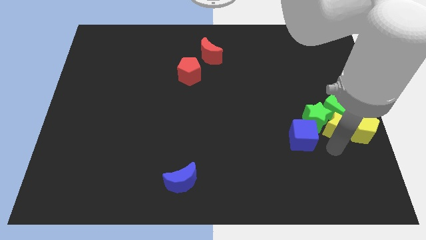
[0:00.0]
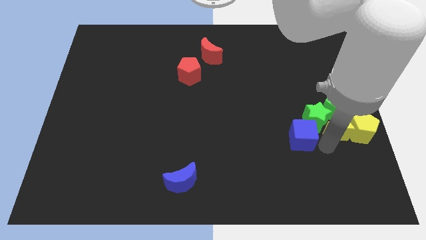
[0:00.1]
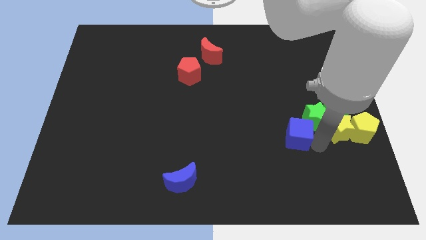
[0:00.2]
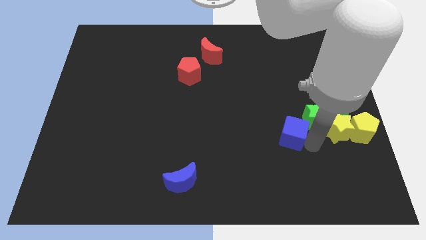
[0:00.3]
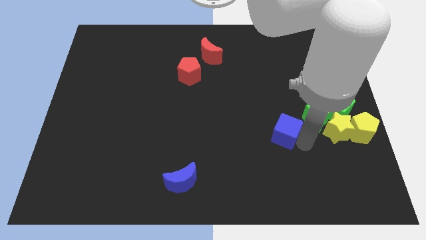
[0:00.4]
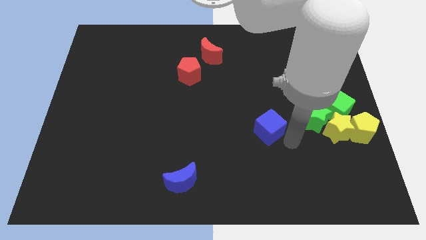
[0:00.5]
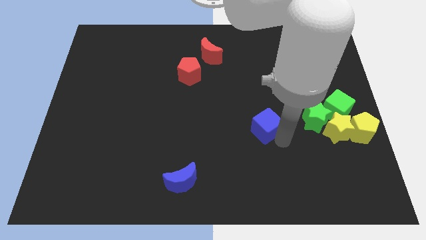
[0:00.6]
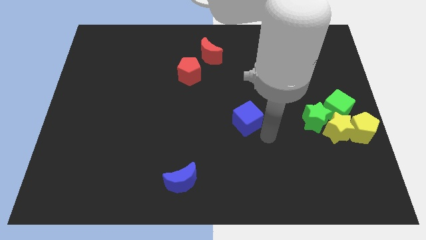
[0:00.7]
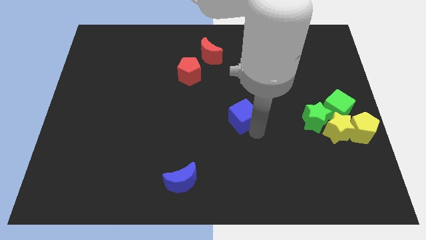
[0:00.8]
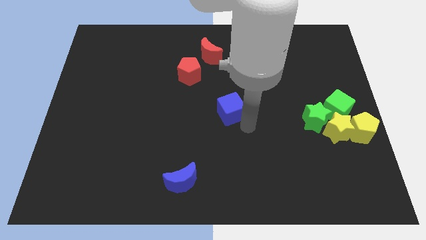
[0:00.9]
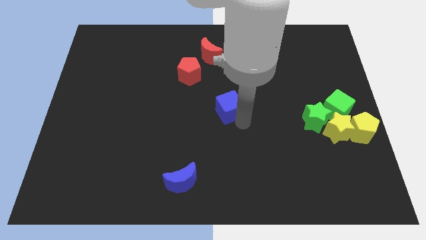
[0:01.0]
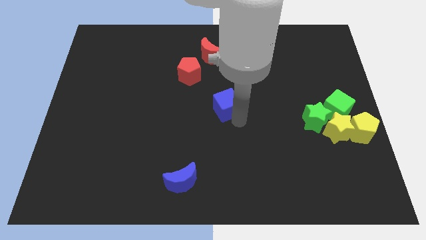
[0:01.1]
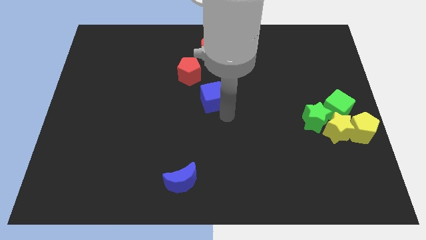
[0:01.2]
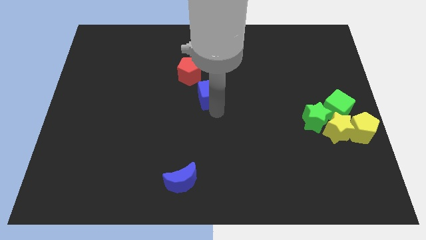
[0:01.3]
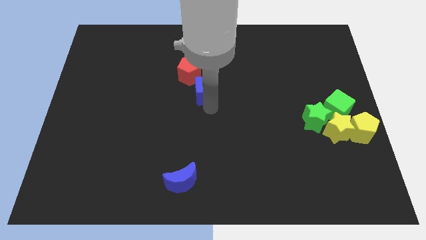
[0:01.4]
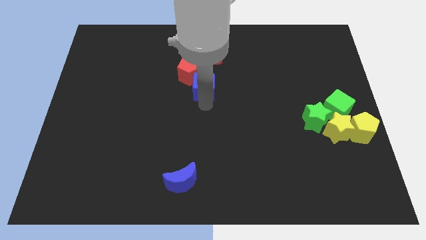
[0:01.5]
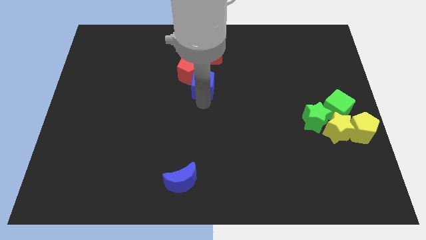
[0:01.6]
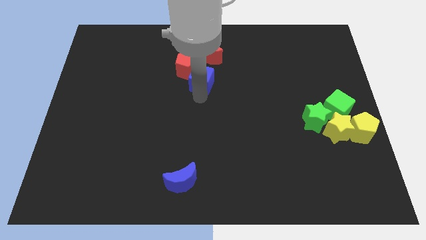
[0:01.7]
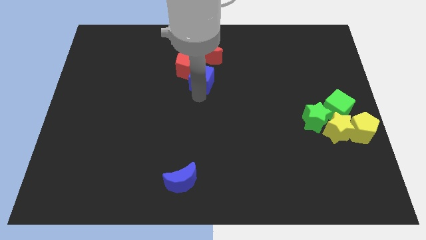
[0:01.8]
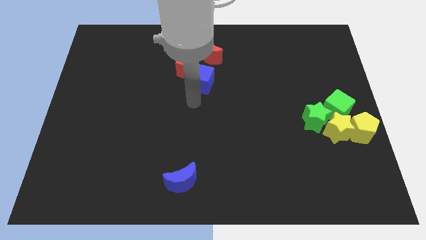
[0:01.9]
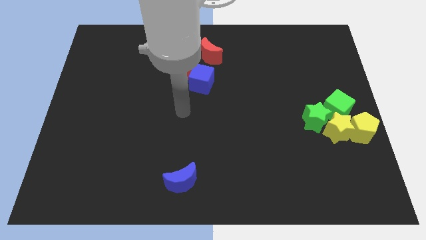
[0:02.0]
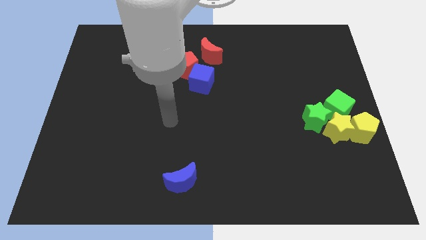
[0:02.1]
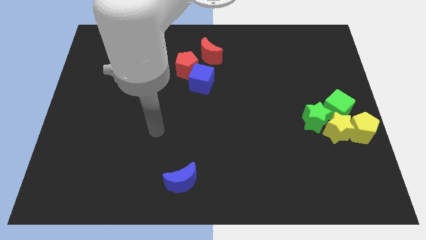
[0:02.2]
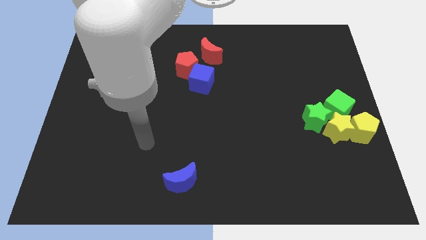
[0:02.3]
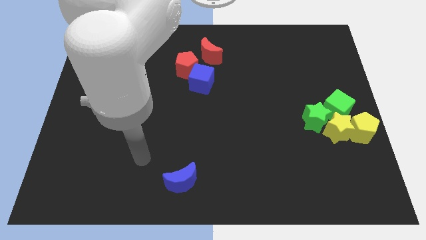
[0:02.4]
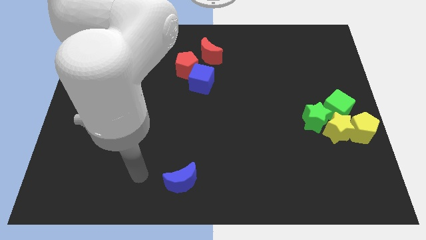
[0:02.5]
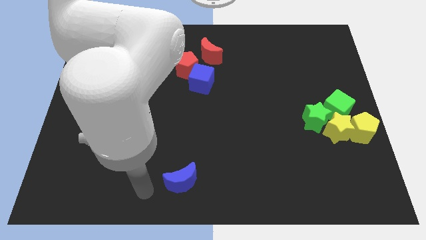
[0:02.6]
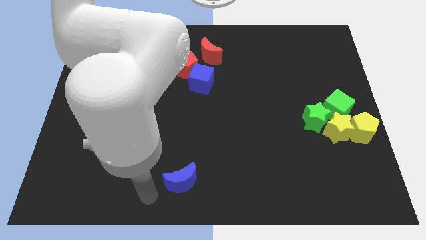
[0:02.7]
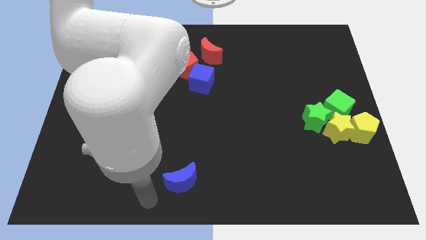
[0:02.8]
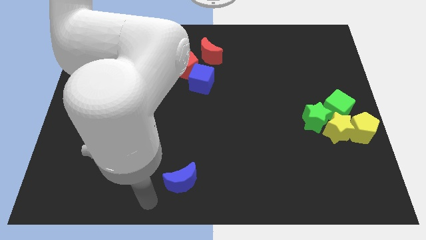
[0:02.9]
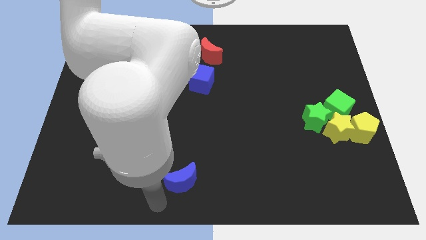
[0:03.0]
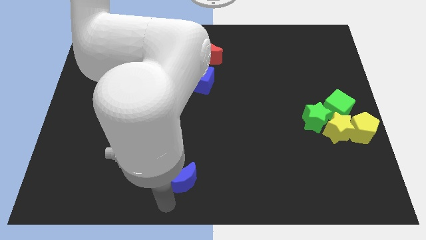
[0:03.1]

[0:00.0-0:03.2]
push the blue cube into the red pentagon

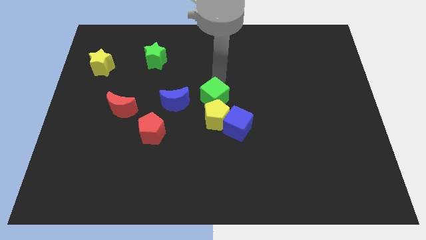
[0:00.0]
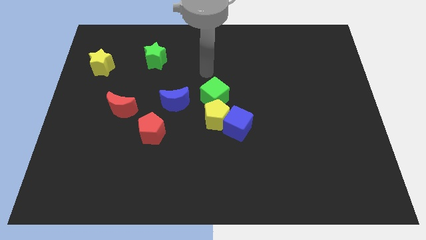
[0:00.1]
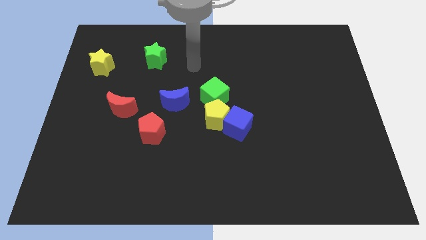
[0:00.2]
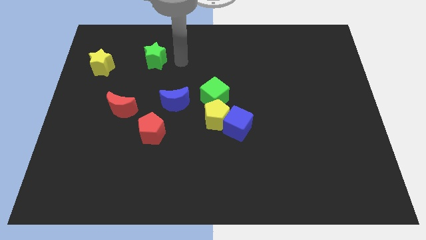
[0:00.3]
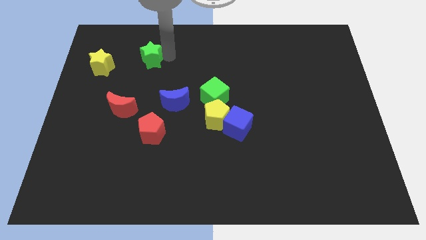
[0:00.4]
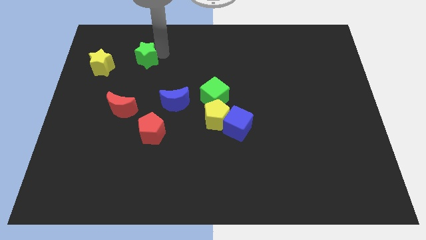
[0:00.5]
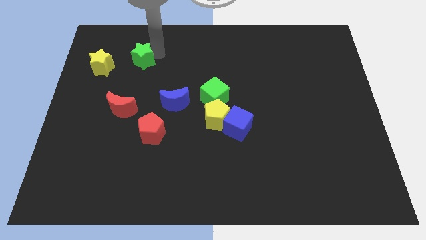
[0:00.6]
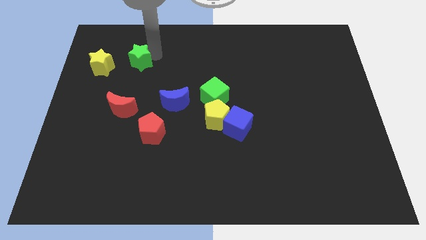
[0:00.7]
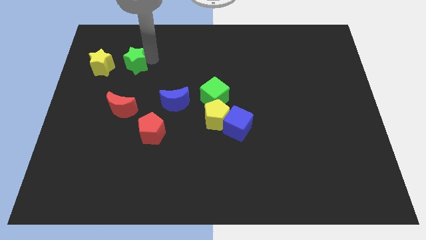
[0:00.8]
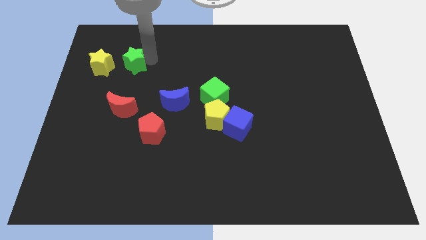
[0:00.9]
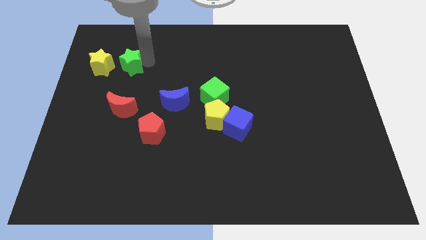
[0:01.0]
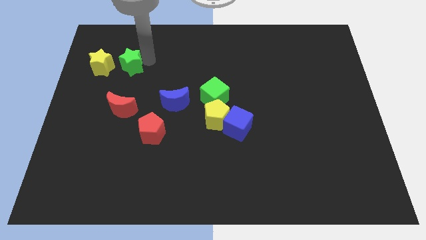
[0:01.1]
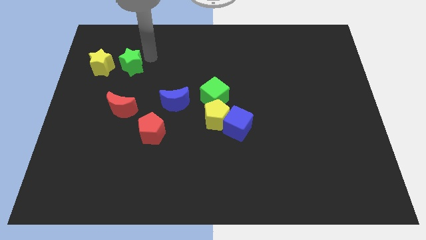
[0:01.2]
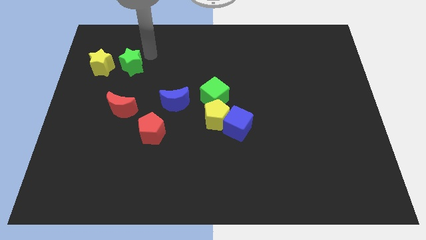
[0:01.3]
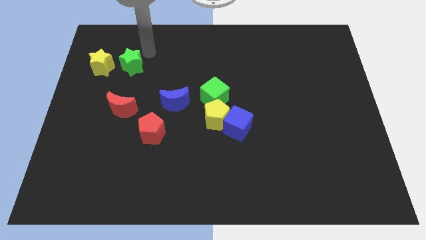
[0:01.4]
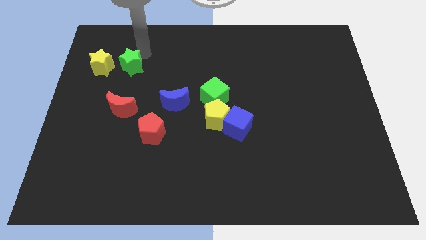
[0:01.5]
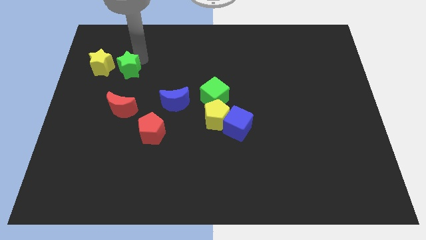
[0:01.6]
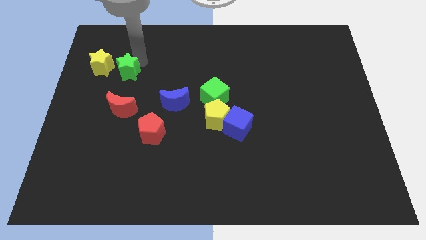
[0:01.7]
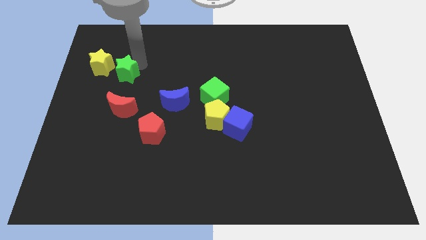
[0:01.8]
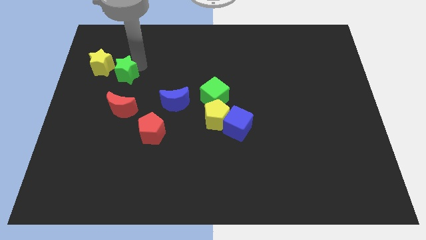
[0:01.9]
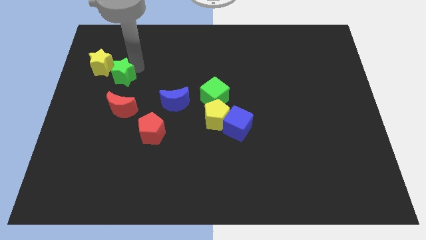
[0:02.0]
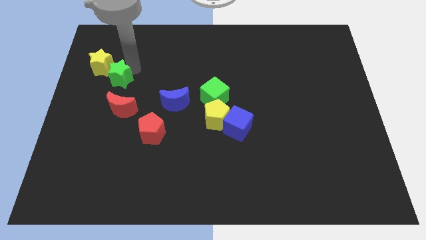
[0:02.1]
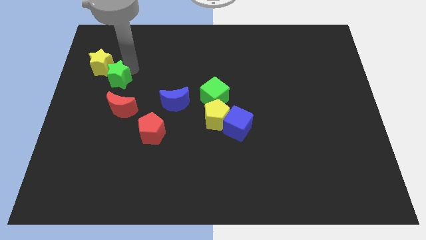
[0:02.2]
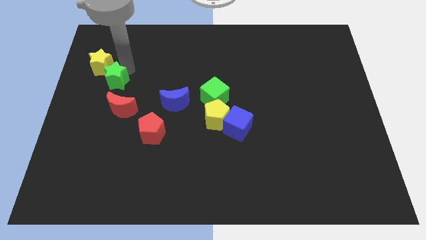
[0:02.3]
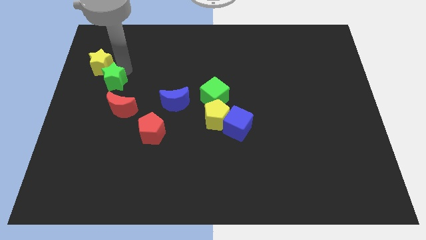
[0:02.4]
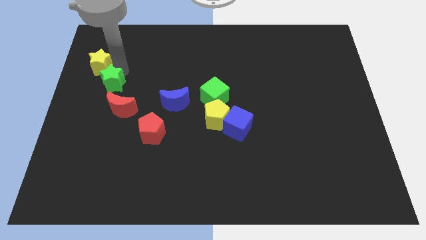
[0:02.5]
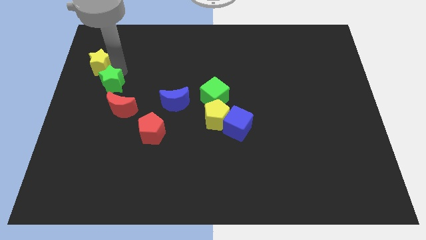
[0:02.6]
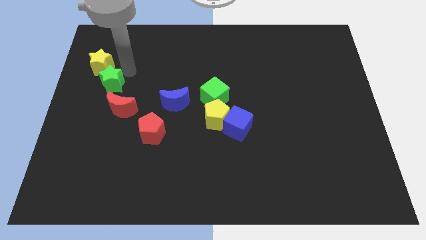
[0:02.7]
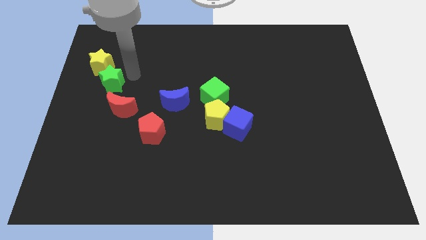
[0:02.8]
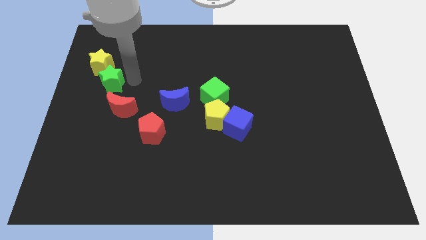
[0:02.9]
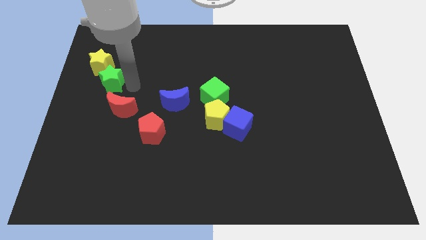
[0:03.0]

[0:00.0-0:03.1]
place green star above red moon

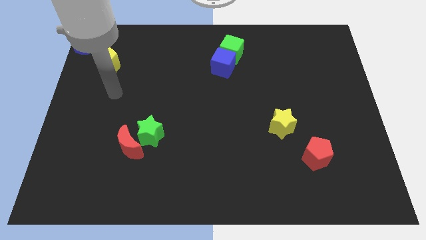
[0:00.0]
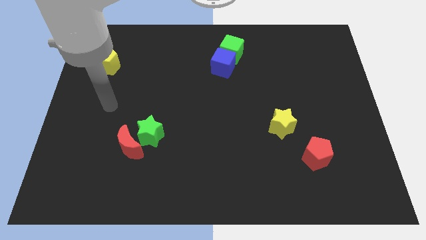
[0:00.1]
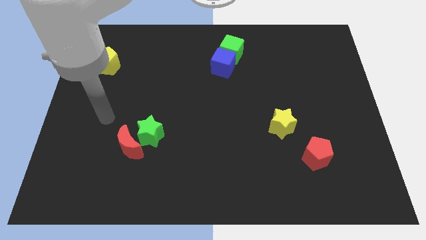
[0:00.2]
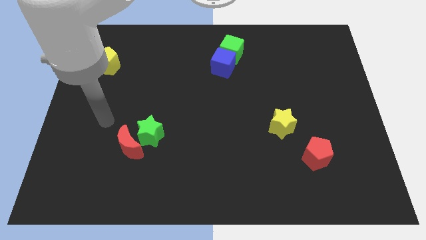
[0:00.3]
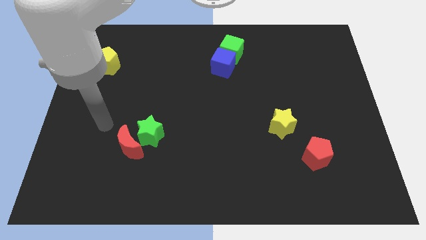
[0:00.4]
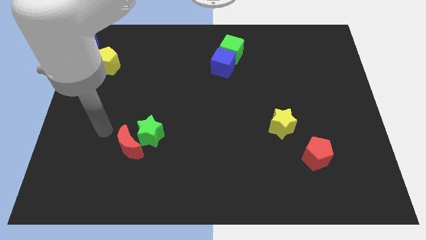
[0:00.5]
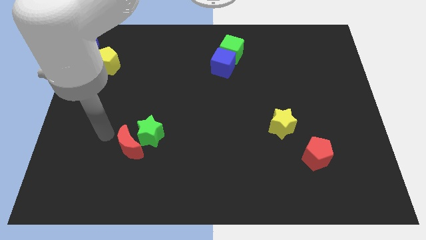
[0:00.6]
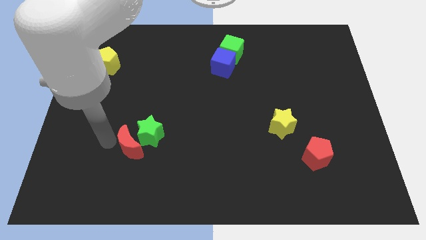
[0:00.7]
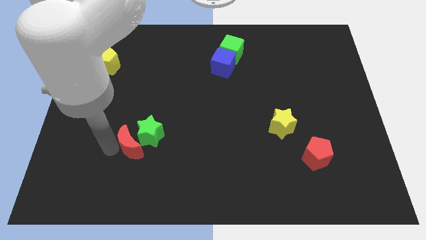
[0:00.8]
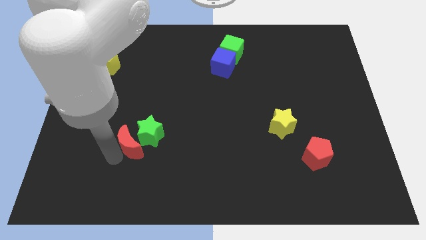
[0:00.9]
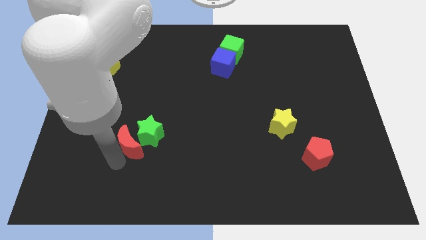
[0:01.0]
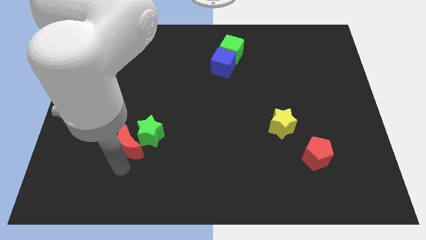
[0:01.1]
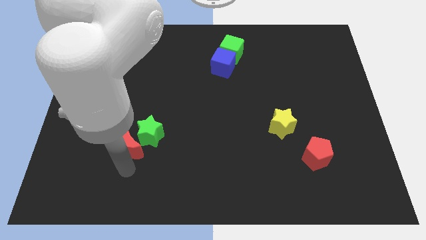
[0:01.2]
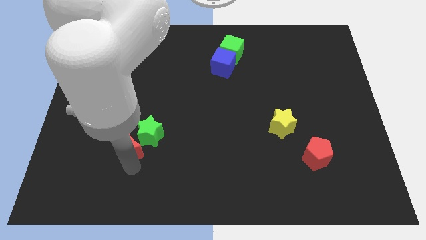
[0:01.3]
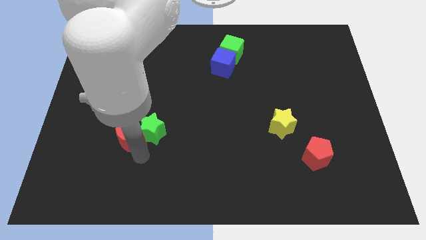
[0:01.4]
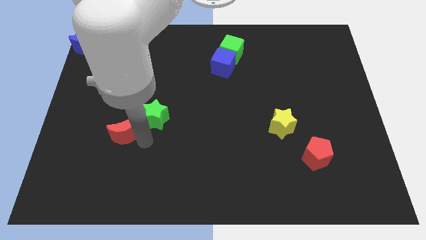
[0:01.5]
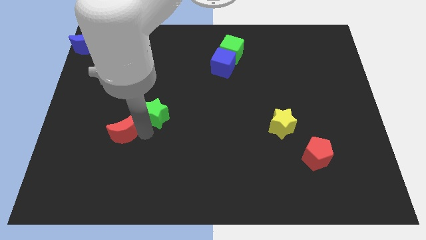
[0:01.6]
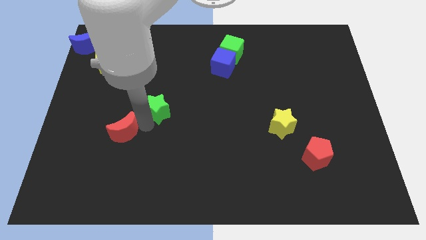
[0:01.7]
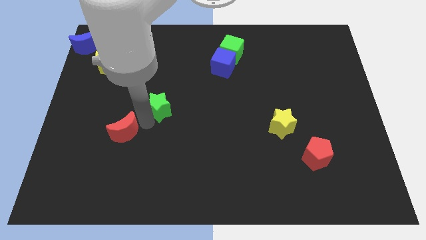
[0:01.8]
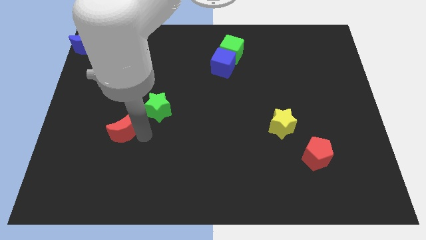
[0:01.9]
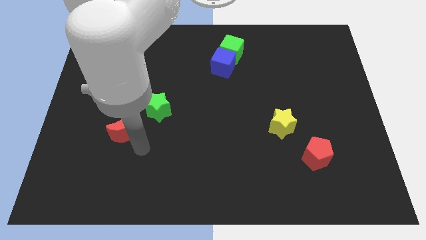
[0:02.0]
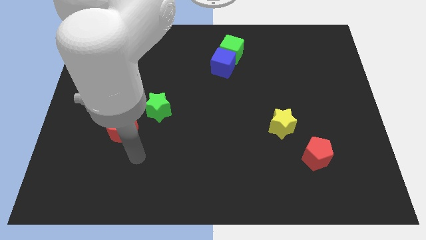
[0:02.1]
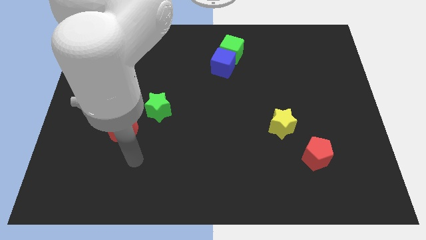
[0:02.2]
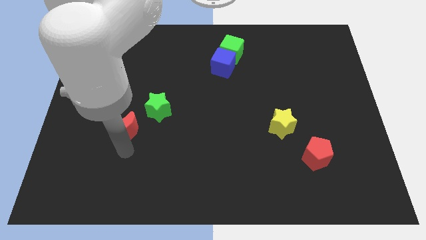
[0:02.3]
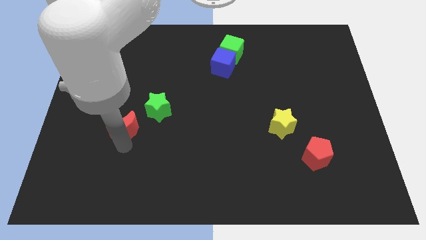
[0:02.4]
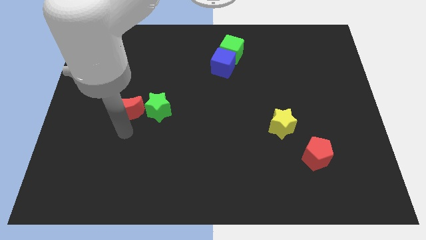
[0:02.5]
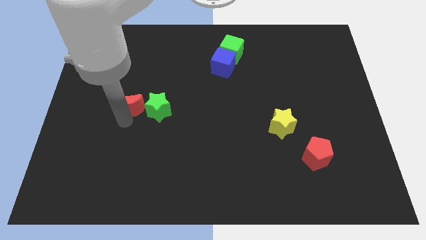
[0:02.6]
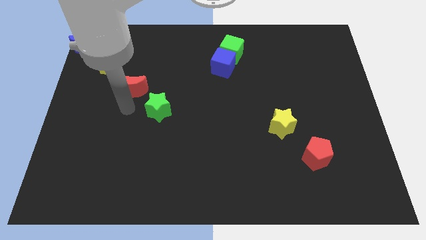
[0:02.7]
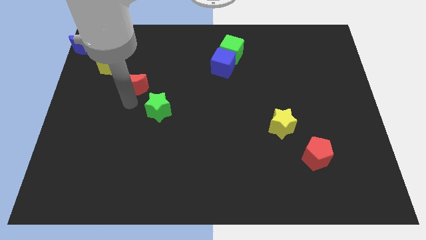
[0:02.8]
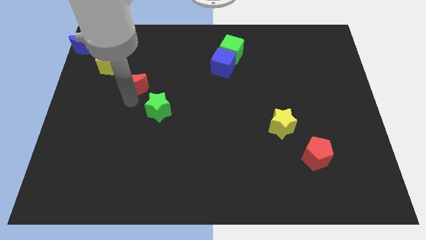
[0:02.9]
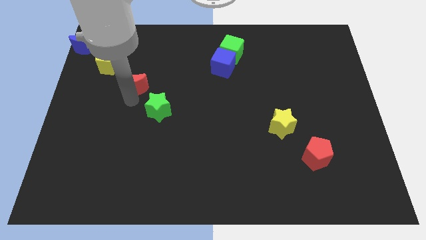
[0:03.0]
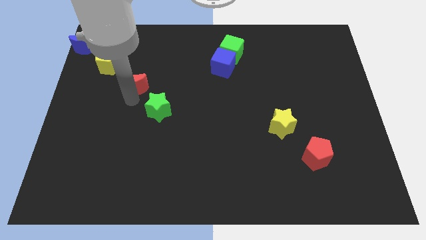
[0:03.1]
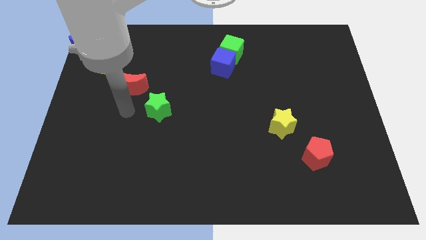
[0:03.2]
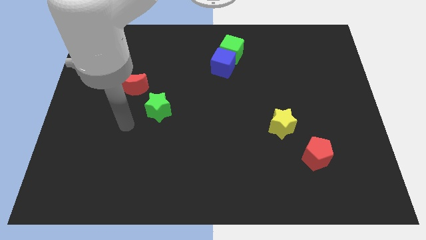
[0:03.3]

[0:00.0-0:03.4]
place the red crescent diagonal to the yellow pentagon
